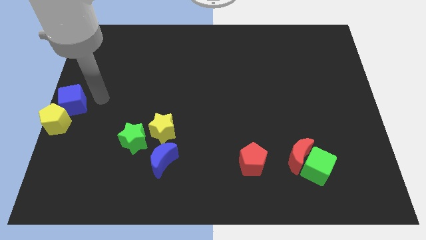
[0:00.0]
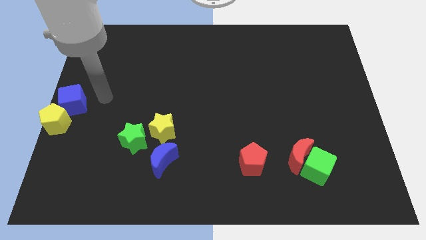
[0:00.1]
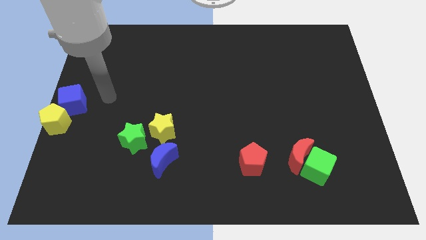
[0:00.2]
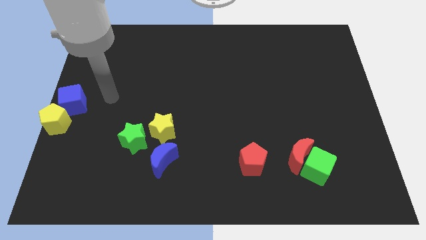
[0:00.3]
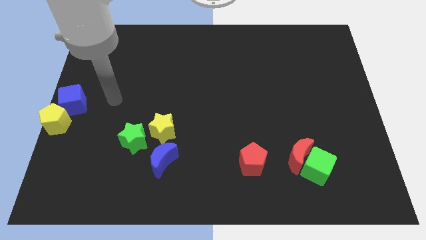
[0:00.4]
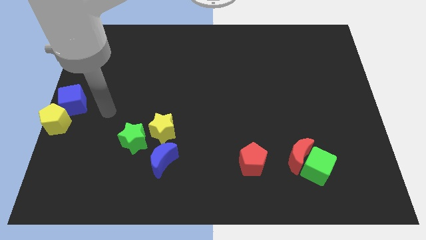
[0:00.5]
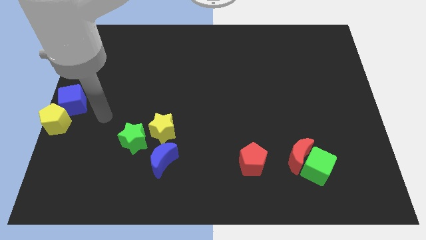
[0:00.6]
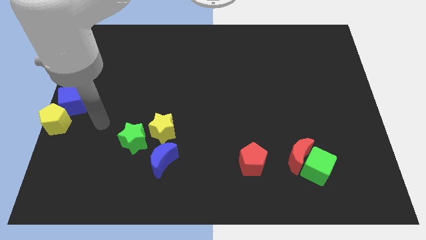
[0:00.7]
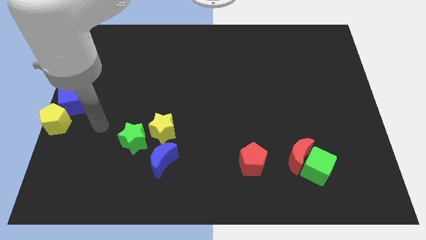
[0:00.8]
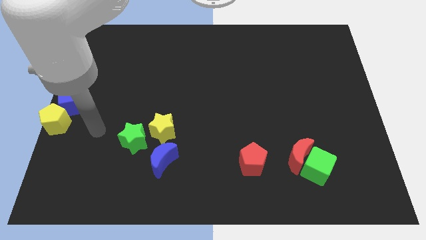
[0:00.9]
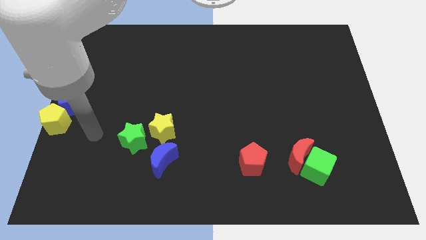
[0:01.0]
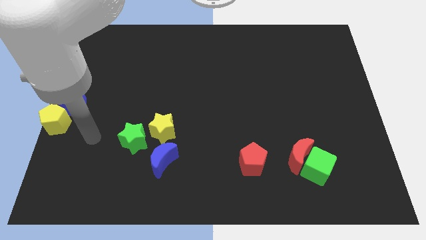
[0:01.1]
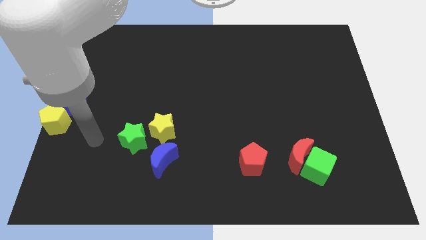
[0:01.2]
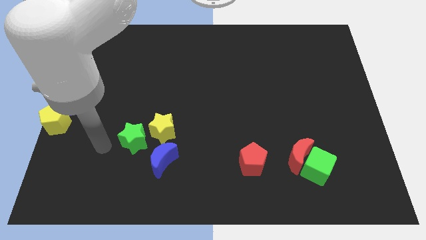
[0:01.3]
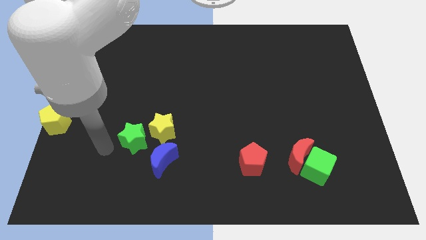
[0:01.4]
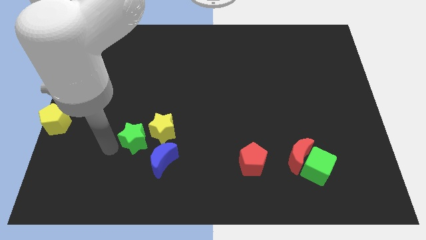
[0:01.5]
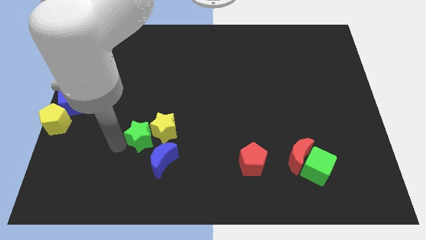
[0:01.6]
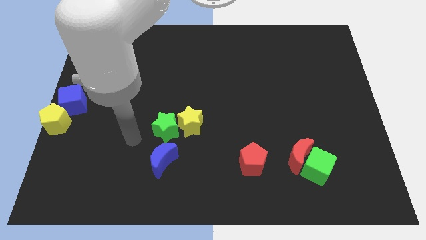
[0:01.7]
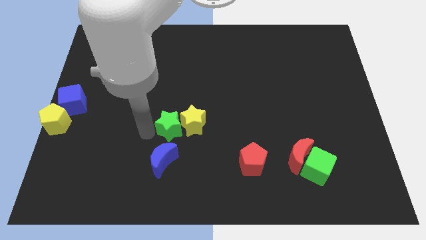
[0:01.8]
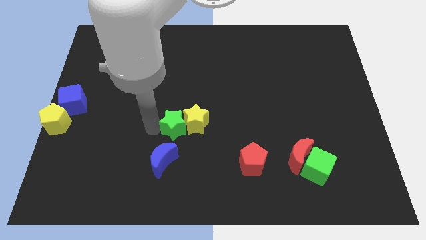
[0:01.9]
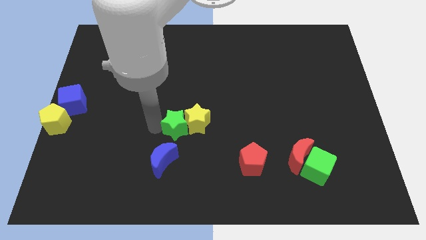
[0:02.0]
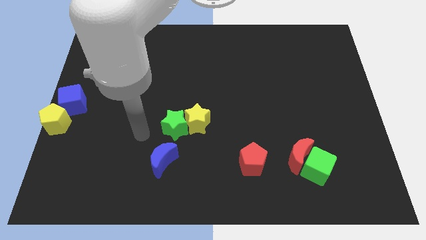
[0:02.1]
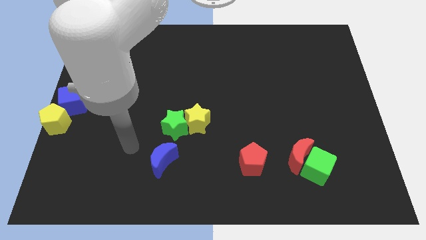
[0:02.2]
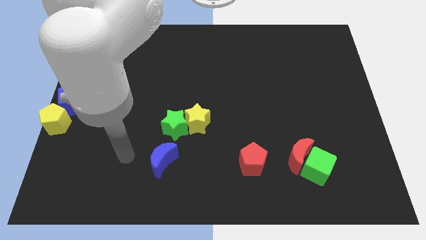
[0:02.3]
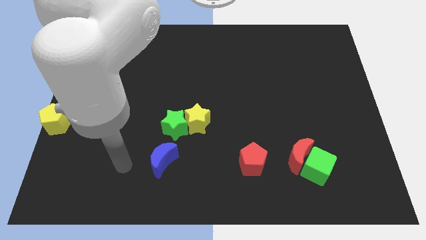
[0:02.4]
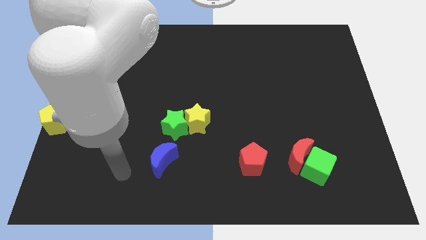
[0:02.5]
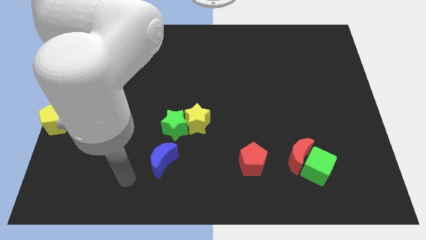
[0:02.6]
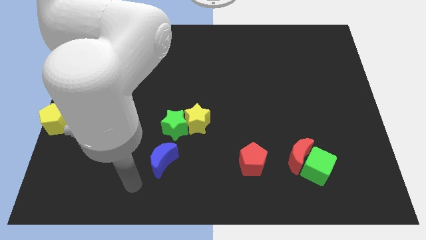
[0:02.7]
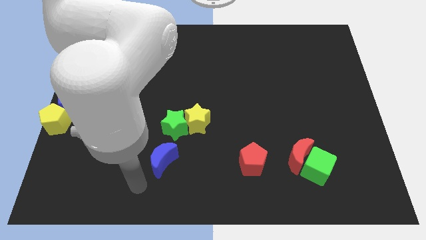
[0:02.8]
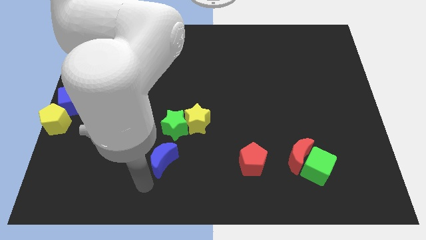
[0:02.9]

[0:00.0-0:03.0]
push the green star along with yellow star towards center

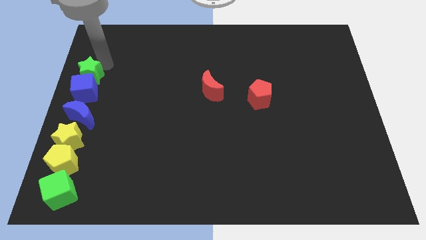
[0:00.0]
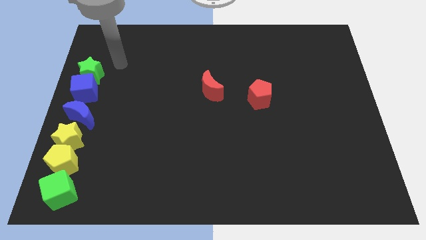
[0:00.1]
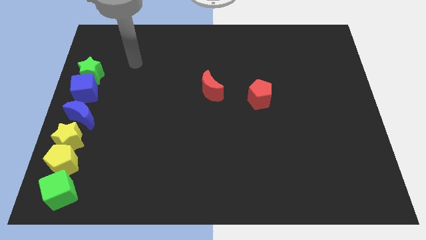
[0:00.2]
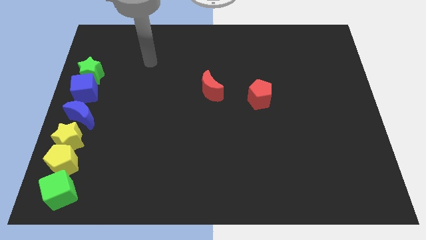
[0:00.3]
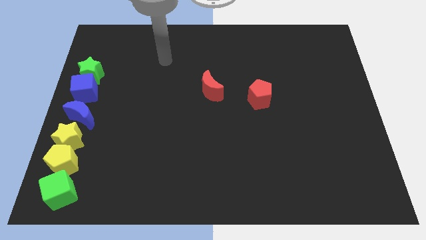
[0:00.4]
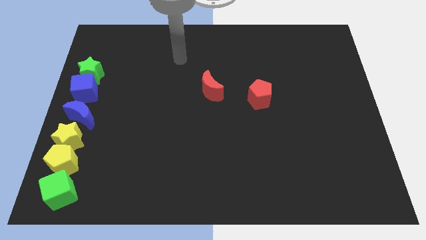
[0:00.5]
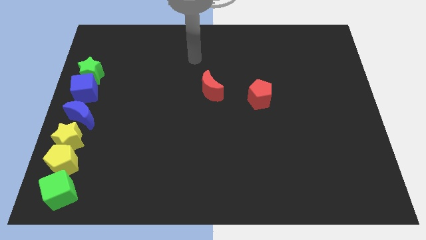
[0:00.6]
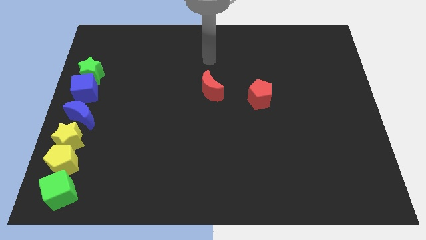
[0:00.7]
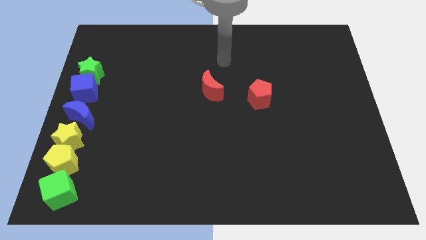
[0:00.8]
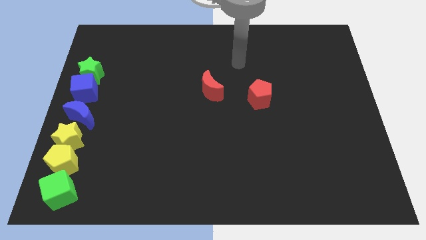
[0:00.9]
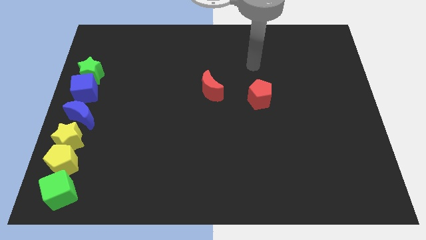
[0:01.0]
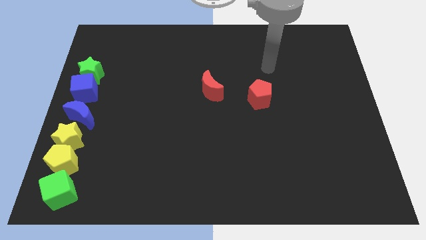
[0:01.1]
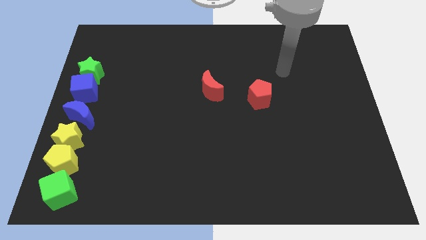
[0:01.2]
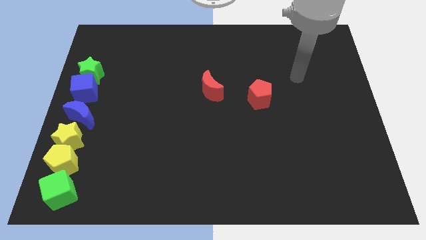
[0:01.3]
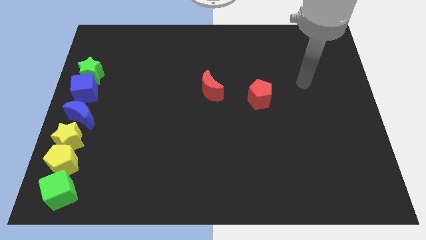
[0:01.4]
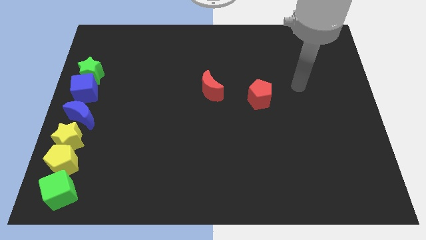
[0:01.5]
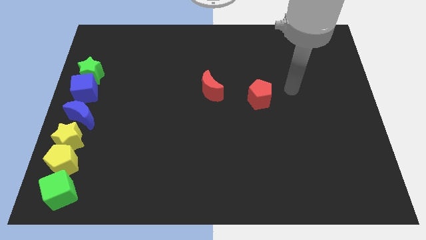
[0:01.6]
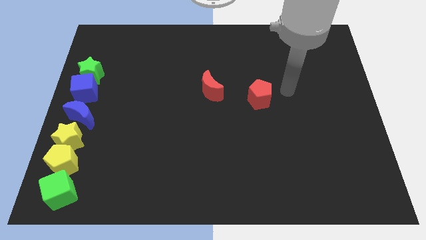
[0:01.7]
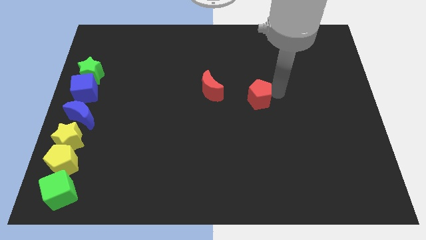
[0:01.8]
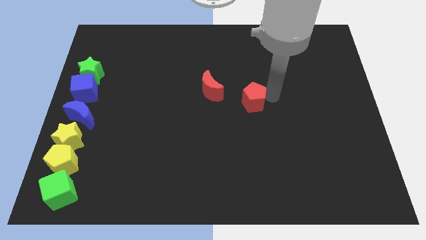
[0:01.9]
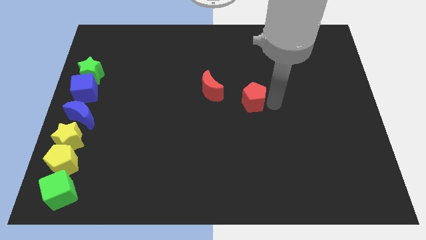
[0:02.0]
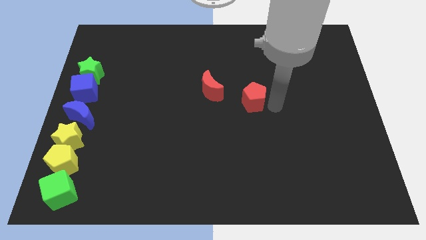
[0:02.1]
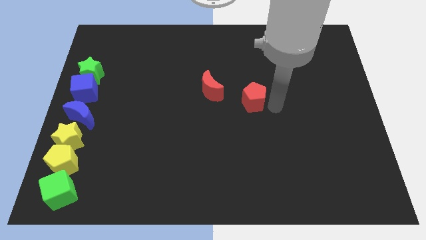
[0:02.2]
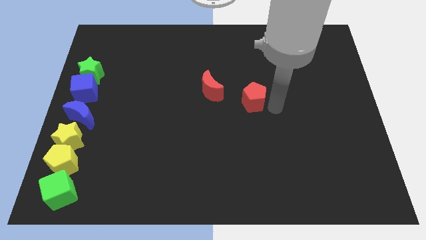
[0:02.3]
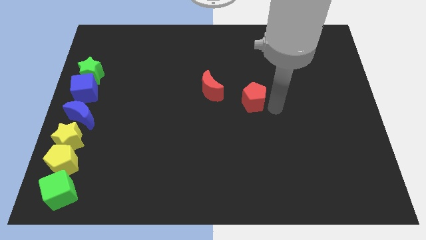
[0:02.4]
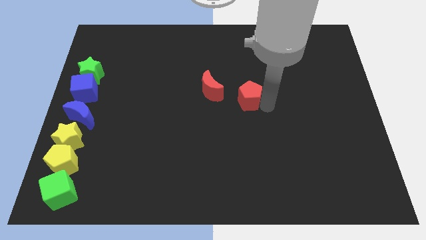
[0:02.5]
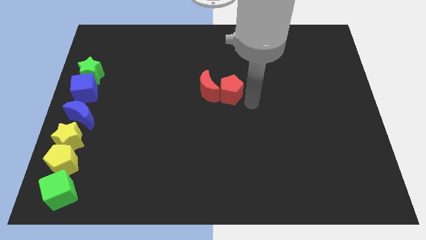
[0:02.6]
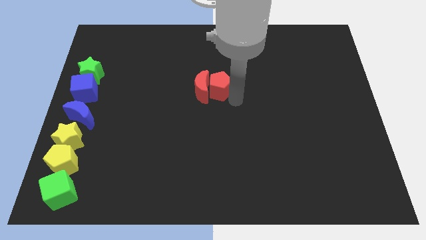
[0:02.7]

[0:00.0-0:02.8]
push the red pentagon into red crescent

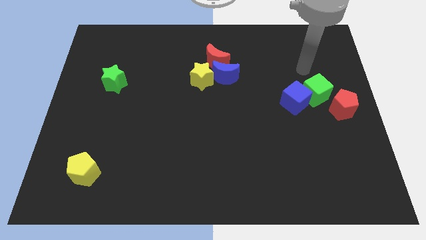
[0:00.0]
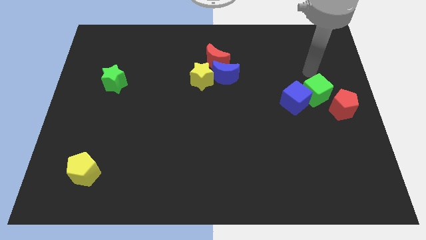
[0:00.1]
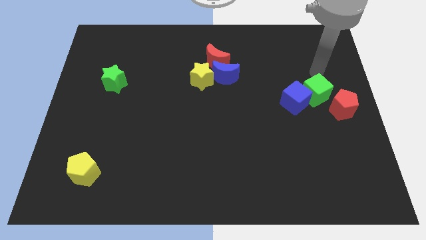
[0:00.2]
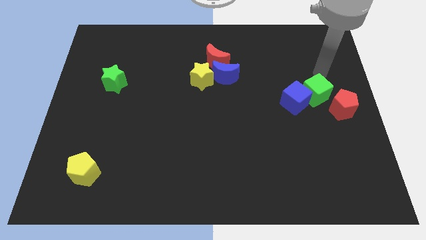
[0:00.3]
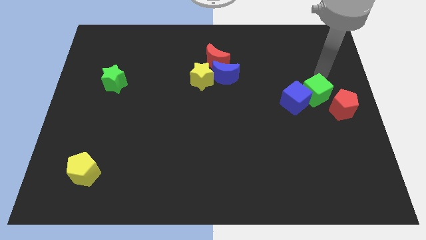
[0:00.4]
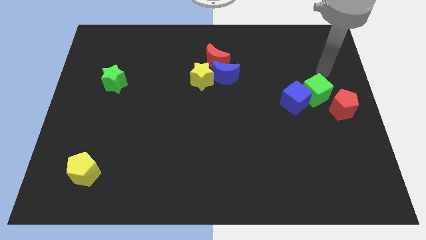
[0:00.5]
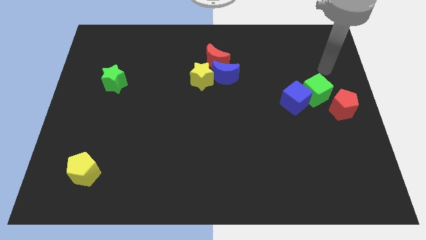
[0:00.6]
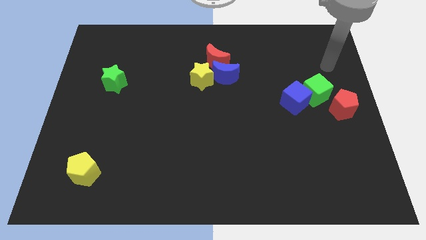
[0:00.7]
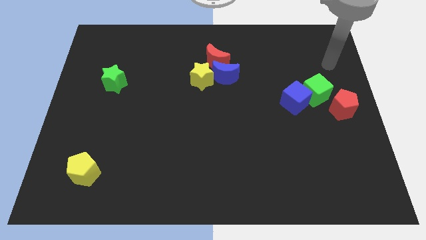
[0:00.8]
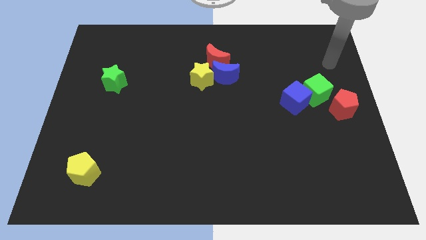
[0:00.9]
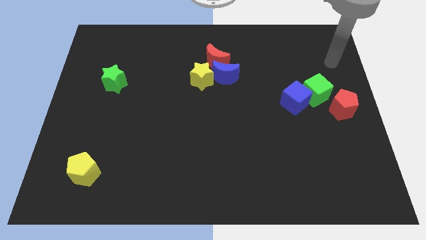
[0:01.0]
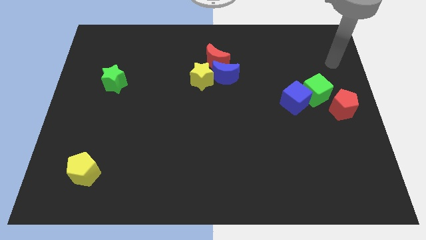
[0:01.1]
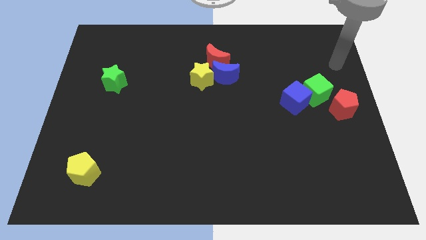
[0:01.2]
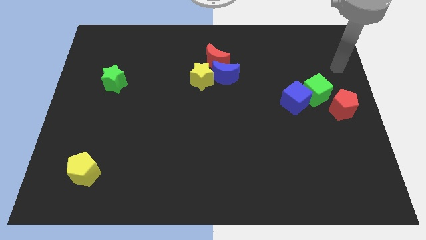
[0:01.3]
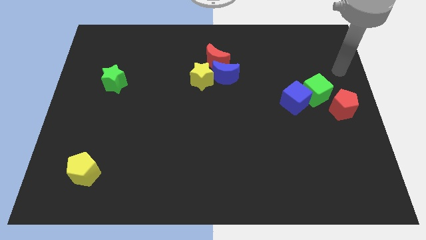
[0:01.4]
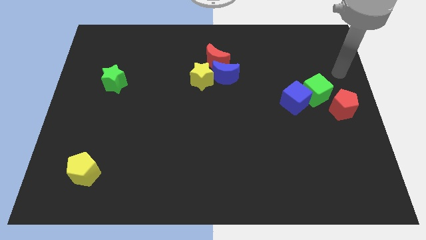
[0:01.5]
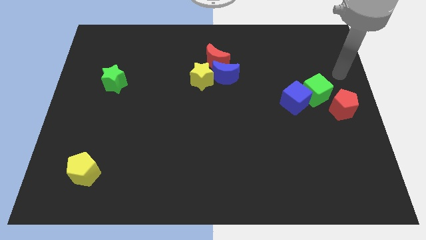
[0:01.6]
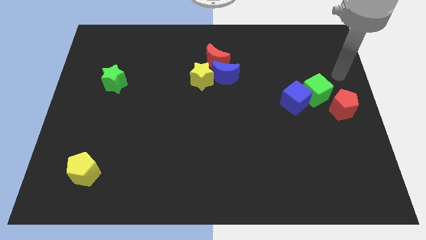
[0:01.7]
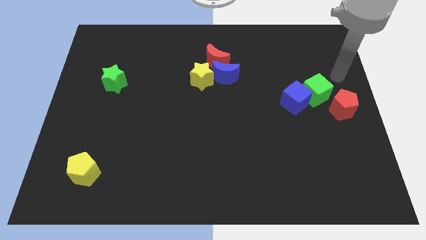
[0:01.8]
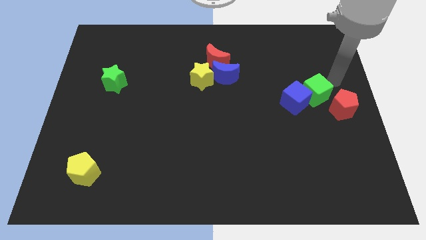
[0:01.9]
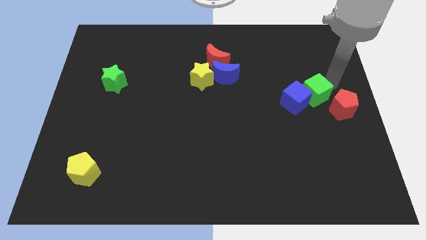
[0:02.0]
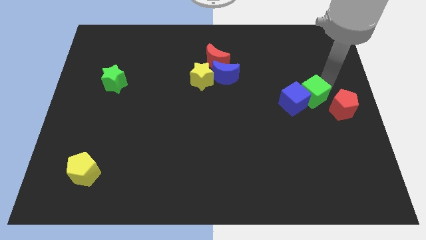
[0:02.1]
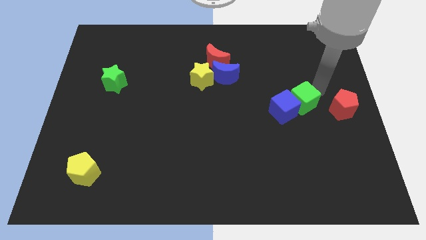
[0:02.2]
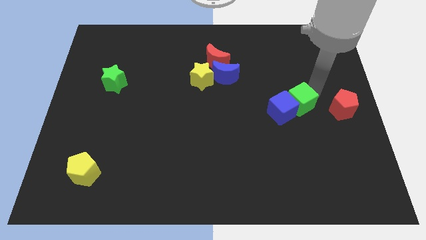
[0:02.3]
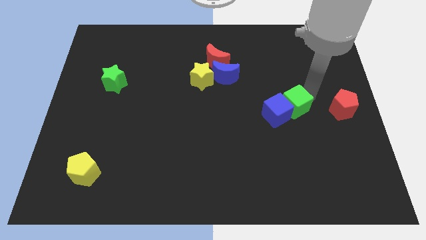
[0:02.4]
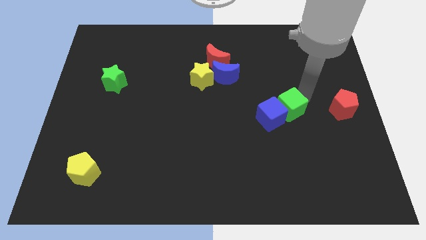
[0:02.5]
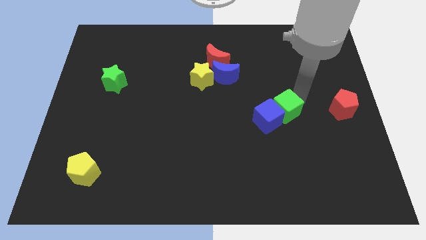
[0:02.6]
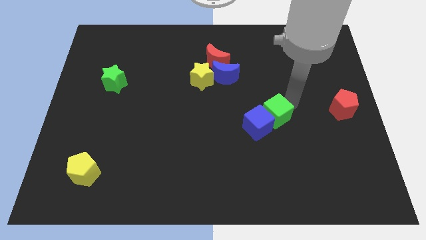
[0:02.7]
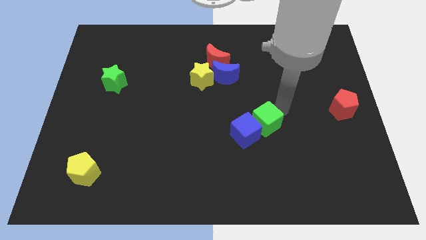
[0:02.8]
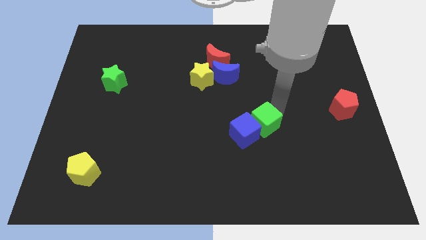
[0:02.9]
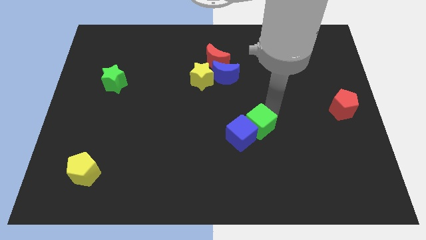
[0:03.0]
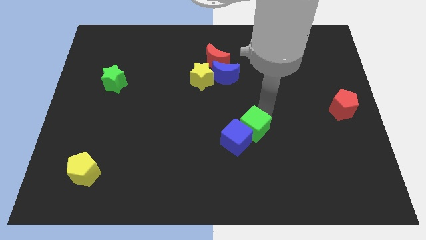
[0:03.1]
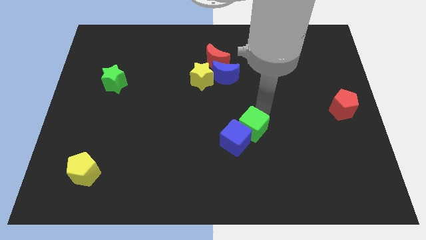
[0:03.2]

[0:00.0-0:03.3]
move the green and the blue cube away from the red pentagon
